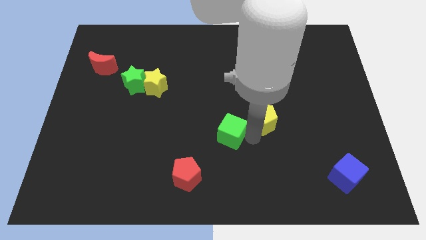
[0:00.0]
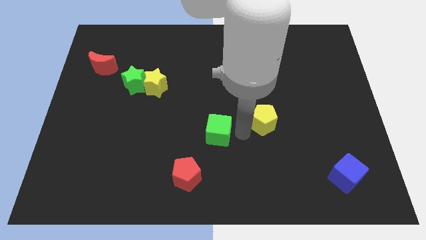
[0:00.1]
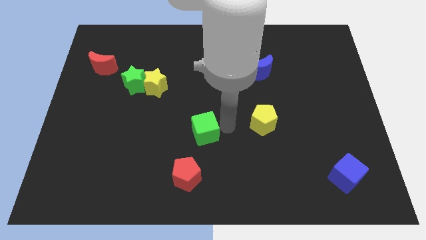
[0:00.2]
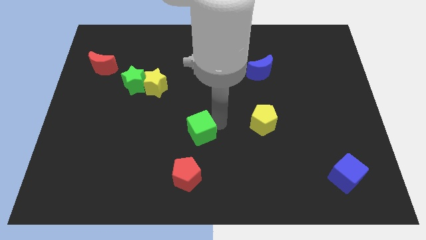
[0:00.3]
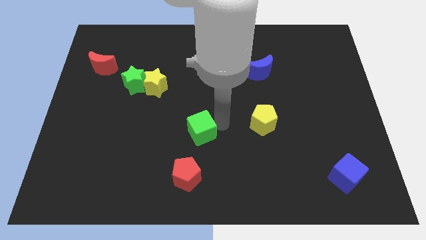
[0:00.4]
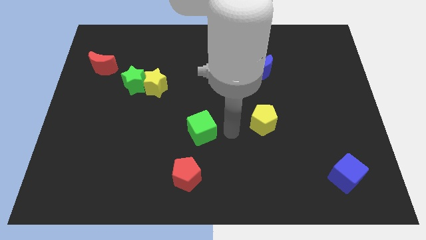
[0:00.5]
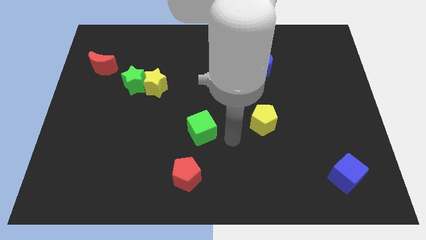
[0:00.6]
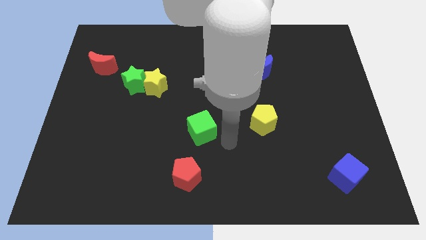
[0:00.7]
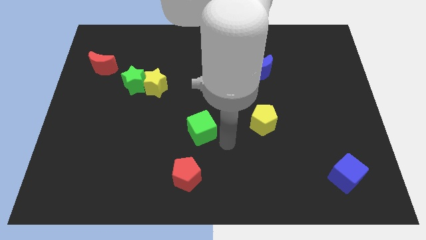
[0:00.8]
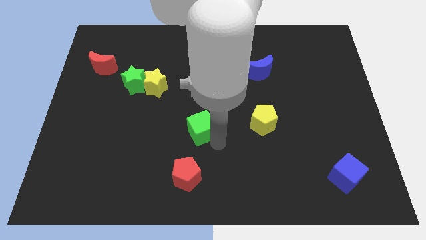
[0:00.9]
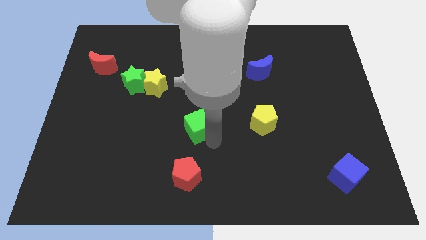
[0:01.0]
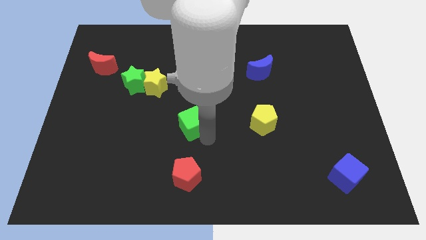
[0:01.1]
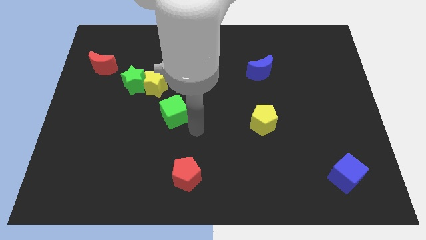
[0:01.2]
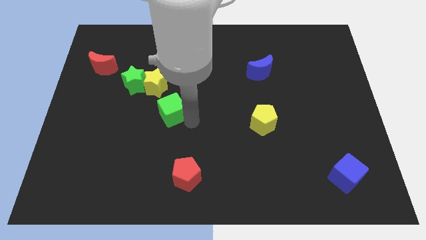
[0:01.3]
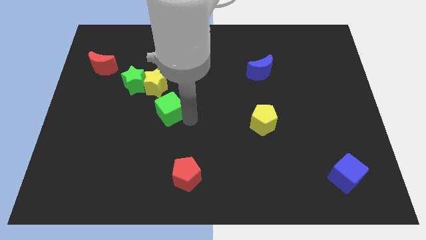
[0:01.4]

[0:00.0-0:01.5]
move green cube away from the yellow pentagon

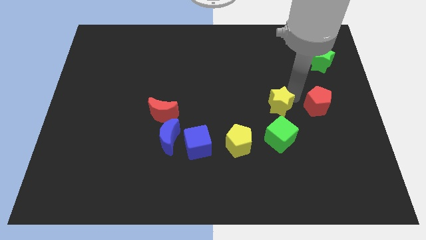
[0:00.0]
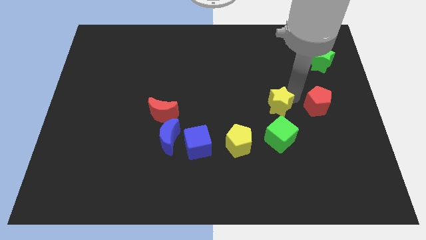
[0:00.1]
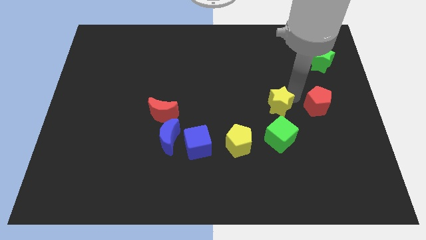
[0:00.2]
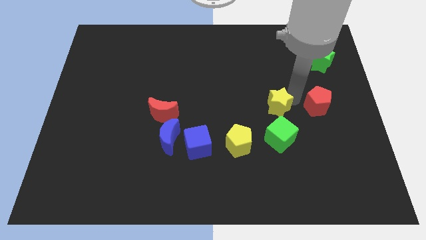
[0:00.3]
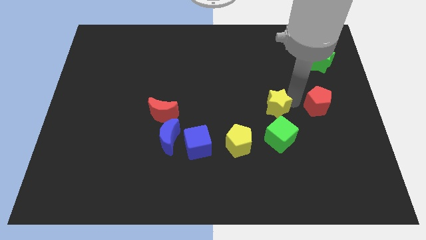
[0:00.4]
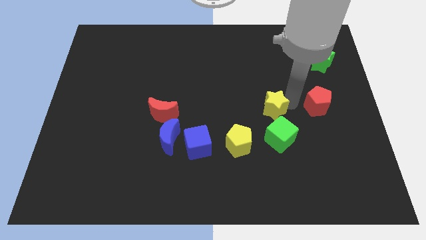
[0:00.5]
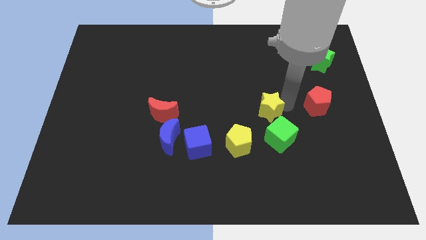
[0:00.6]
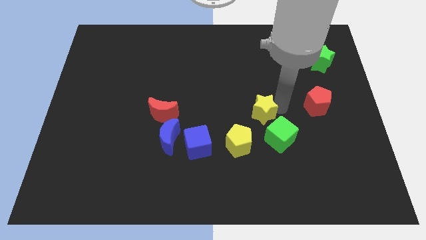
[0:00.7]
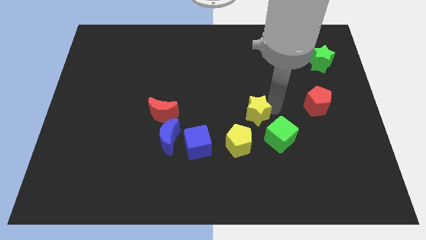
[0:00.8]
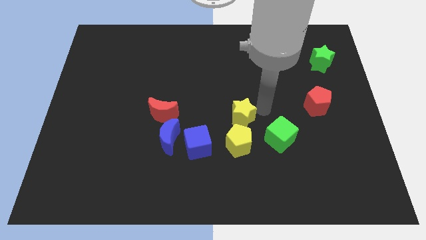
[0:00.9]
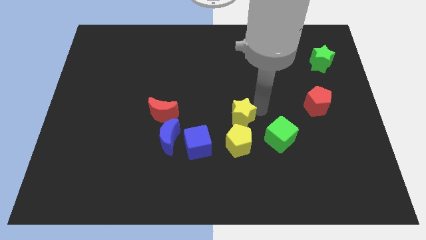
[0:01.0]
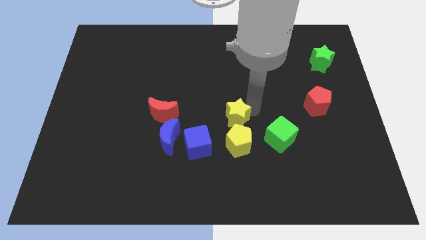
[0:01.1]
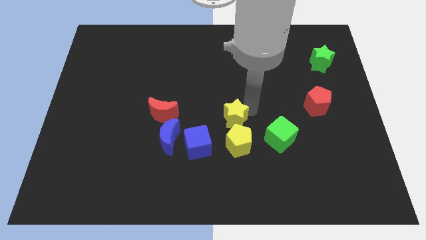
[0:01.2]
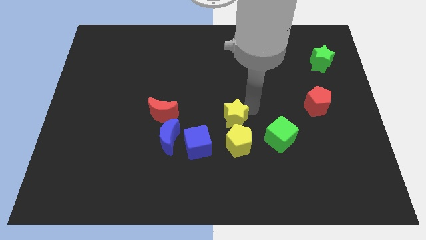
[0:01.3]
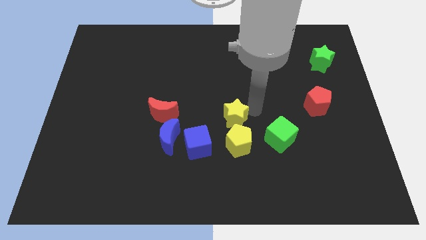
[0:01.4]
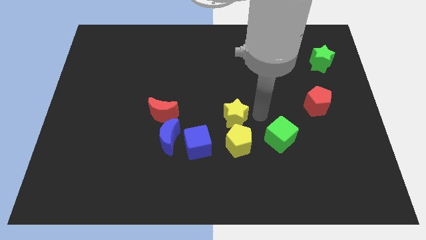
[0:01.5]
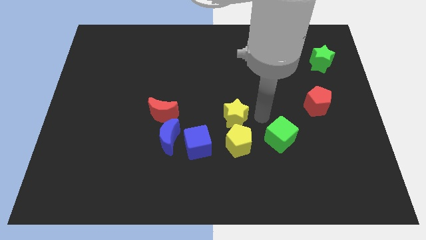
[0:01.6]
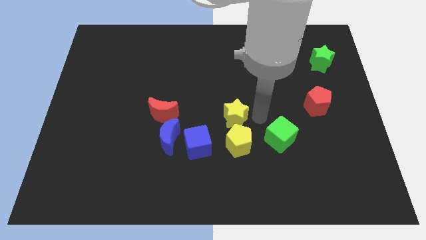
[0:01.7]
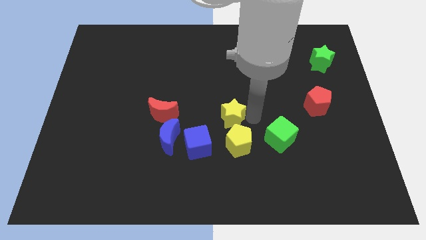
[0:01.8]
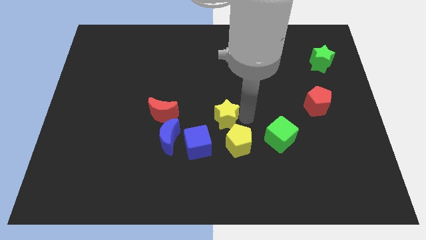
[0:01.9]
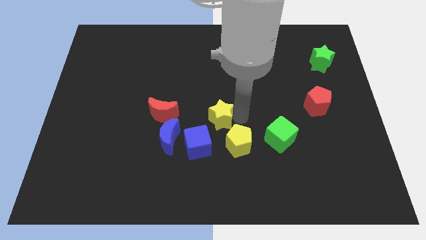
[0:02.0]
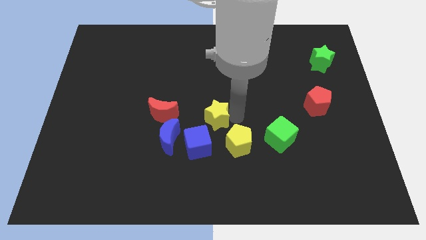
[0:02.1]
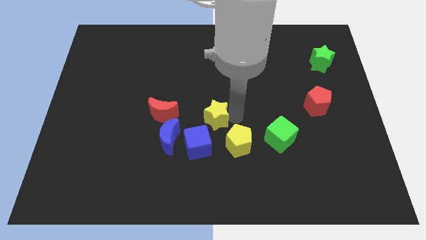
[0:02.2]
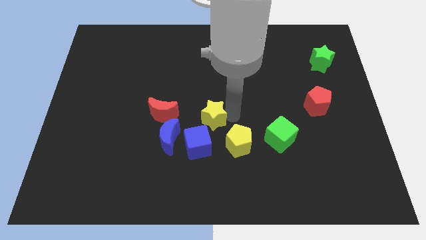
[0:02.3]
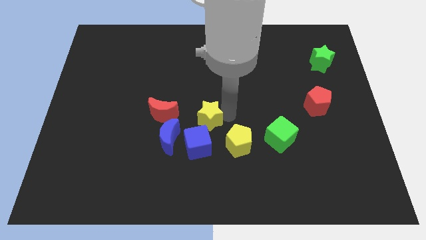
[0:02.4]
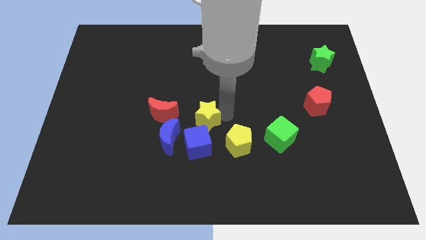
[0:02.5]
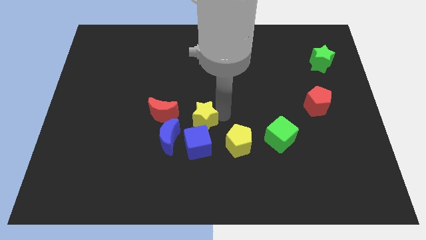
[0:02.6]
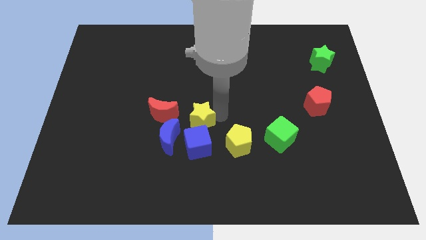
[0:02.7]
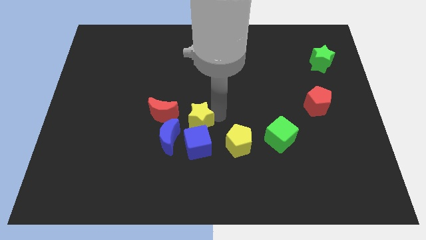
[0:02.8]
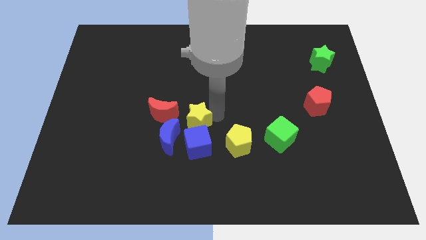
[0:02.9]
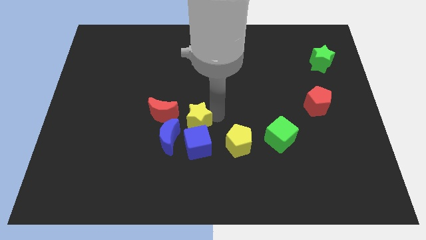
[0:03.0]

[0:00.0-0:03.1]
place the yellow star right side of red crescent

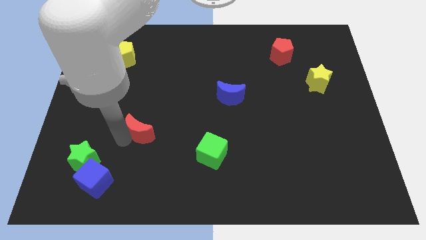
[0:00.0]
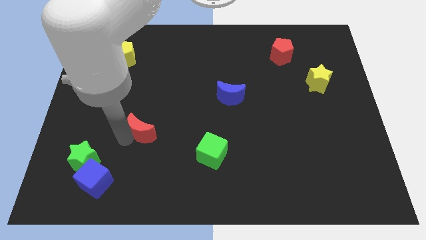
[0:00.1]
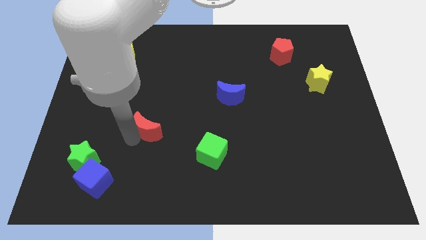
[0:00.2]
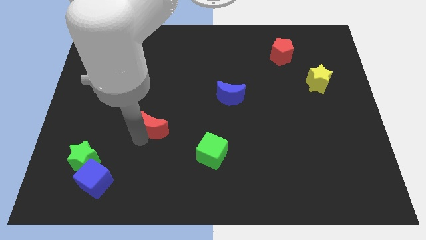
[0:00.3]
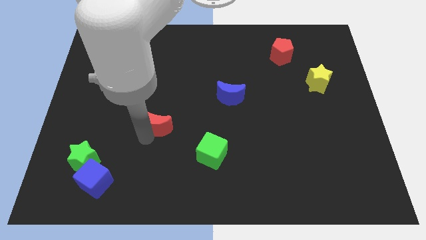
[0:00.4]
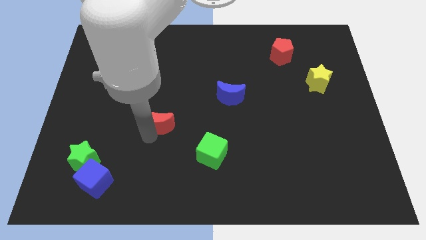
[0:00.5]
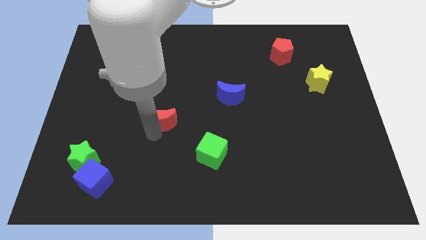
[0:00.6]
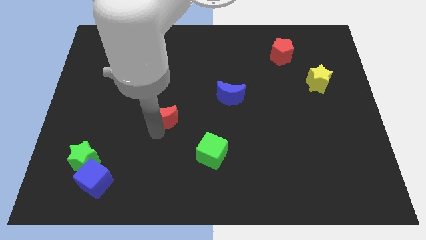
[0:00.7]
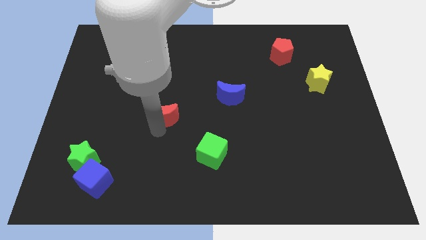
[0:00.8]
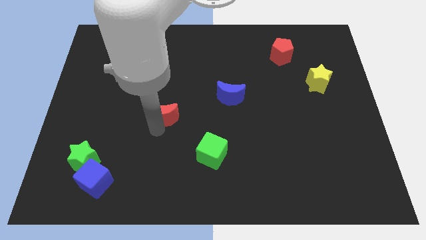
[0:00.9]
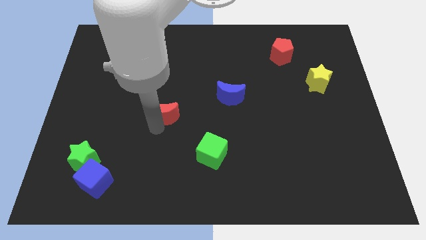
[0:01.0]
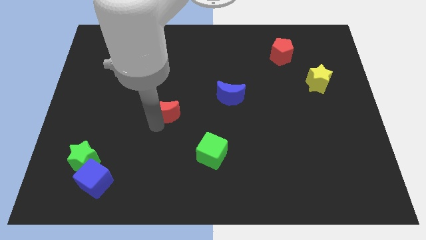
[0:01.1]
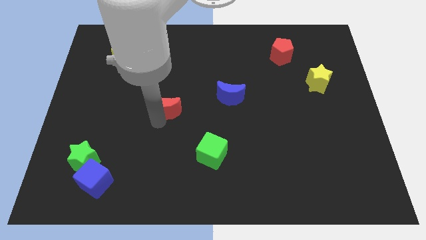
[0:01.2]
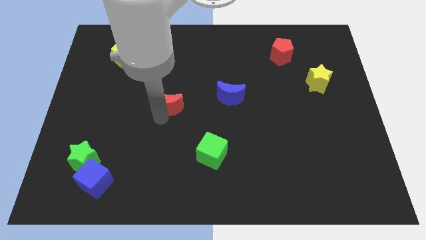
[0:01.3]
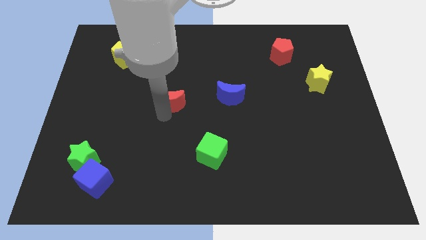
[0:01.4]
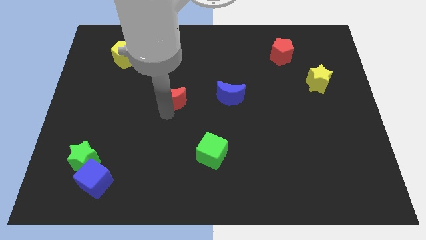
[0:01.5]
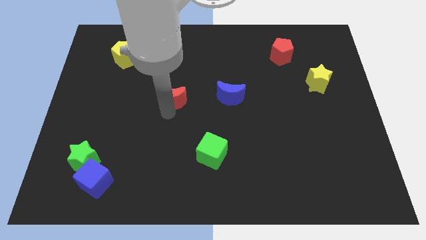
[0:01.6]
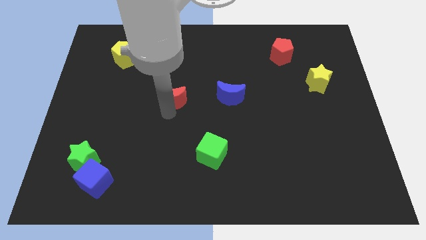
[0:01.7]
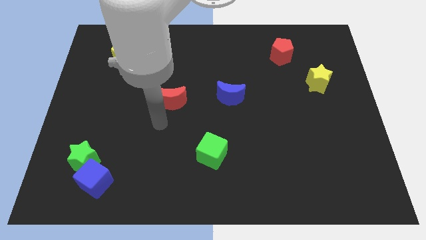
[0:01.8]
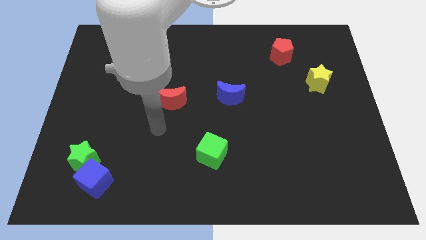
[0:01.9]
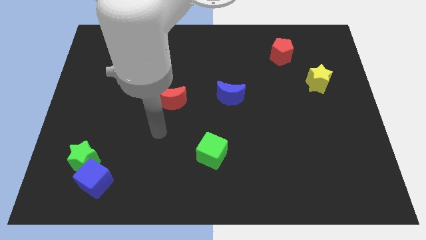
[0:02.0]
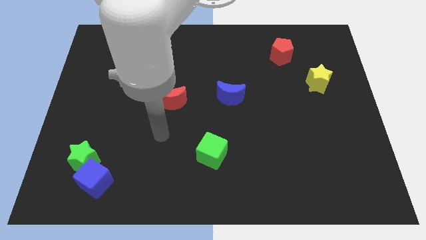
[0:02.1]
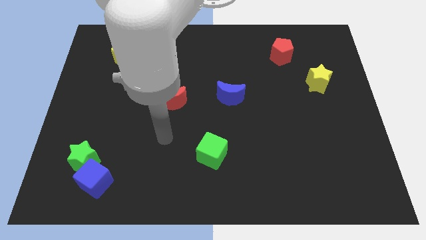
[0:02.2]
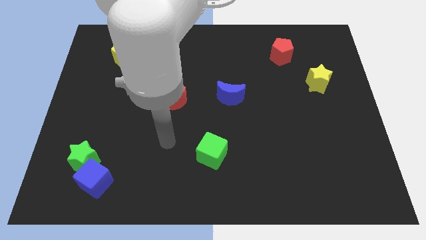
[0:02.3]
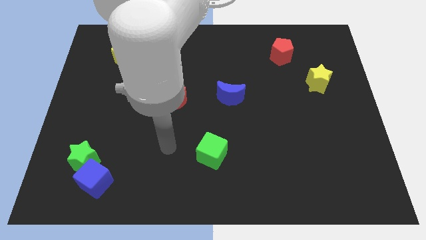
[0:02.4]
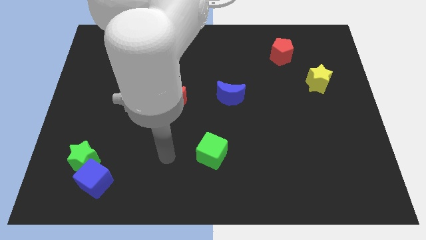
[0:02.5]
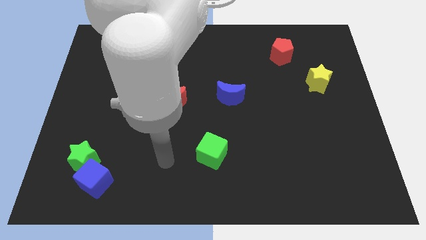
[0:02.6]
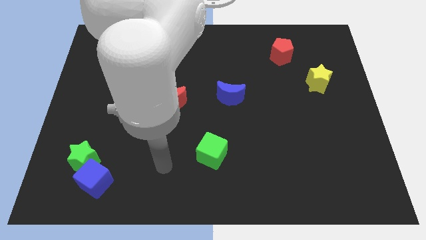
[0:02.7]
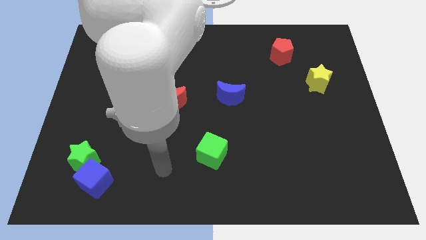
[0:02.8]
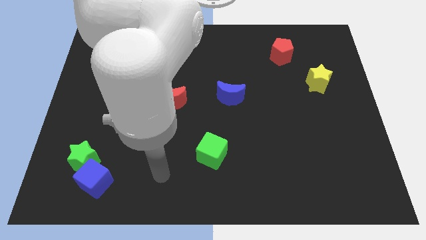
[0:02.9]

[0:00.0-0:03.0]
push the red crescent to the top left of the green cube

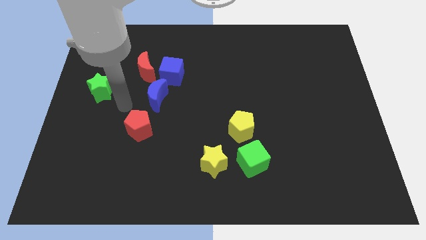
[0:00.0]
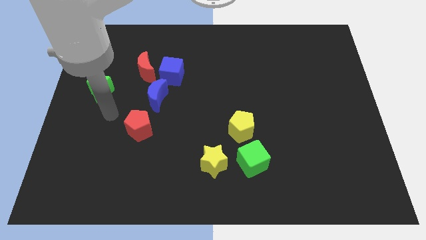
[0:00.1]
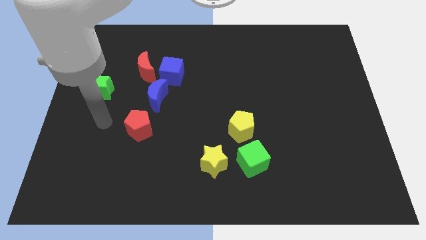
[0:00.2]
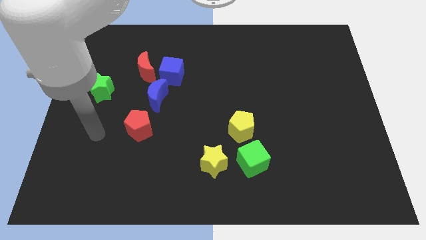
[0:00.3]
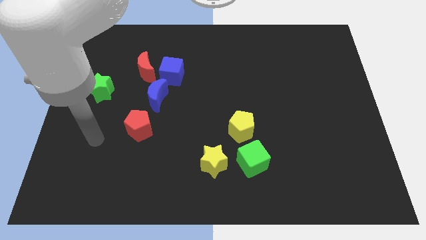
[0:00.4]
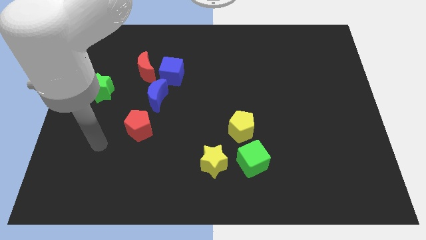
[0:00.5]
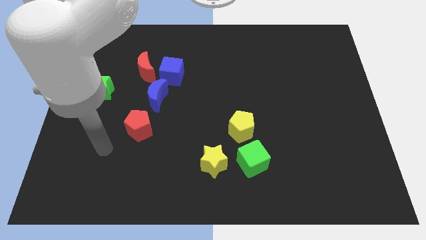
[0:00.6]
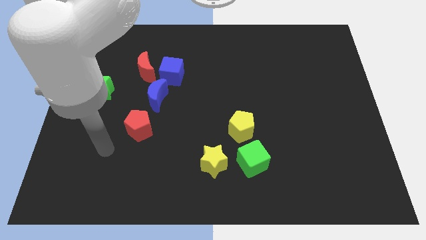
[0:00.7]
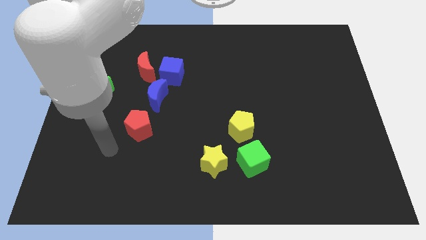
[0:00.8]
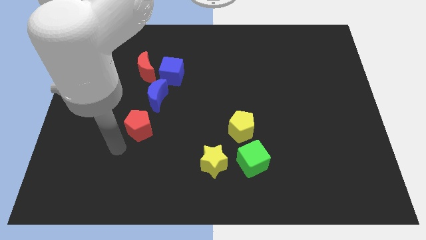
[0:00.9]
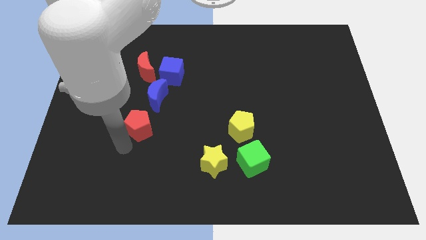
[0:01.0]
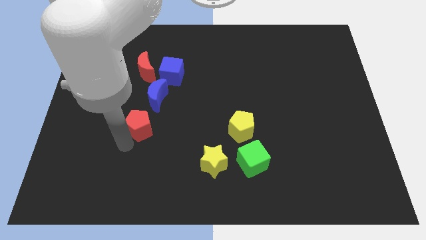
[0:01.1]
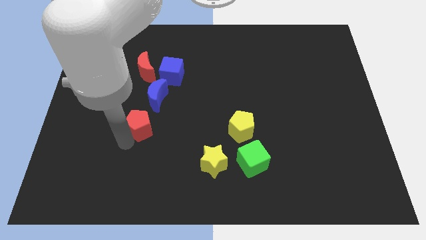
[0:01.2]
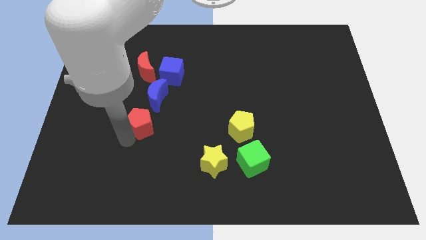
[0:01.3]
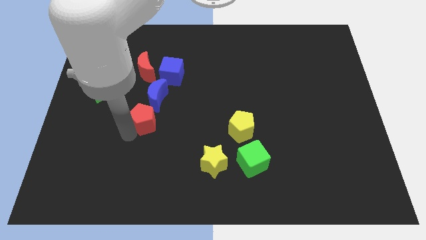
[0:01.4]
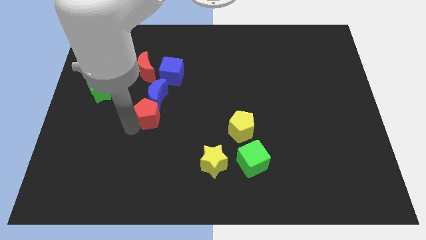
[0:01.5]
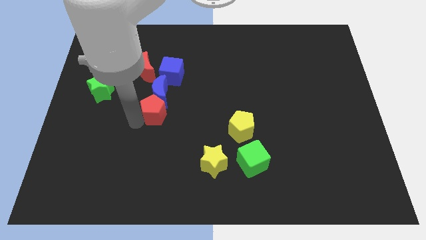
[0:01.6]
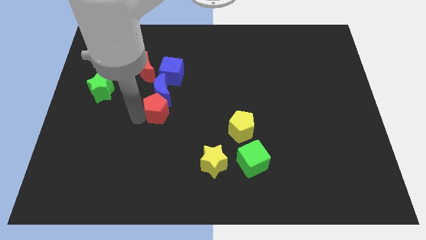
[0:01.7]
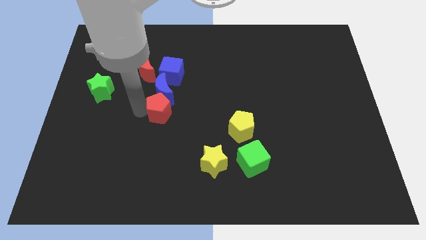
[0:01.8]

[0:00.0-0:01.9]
push the red pentagon into the blue crescent
